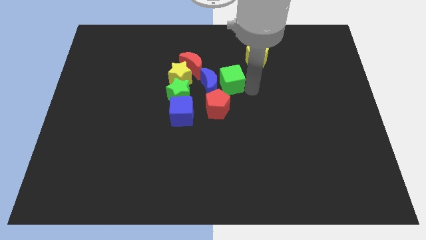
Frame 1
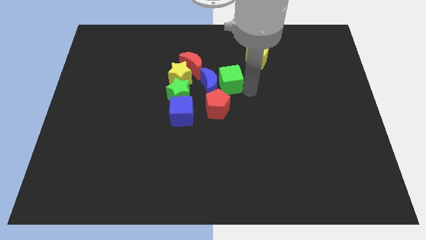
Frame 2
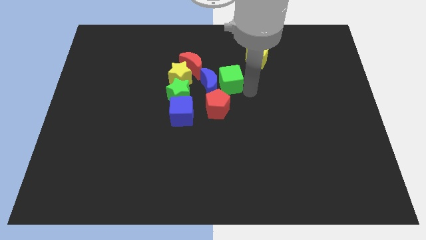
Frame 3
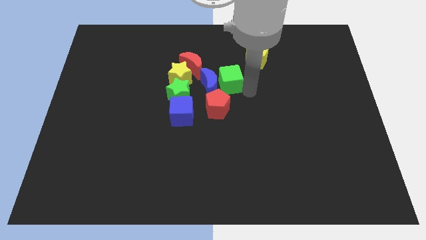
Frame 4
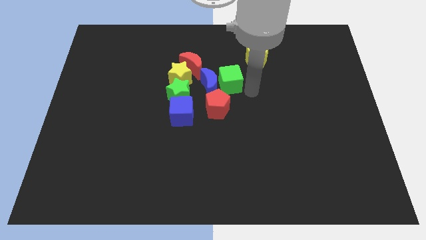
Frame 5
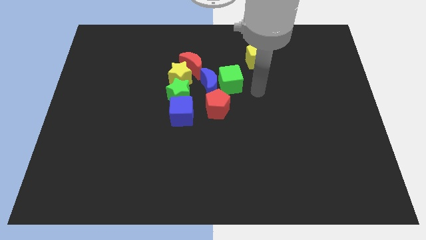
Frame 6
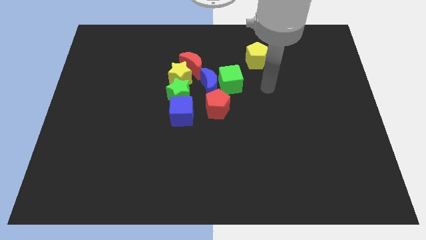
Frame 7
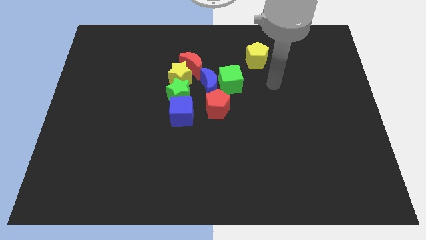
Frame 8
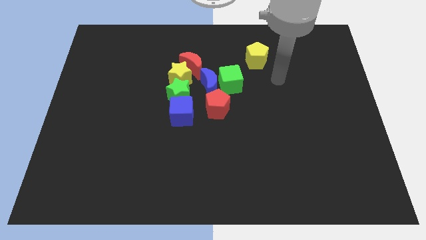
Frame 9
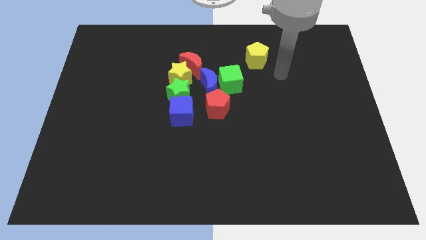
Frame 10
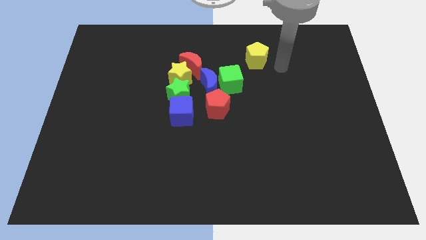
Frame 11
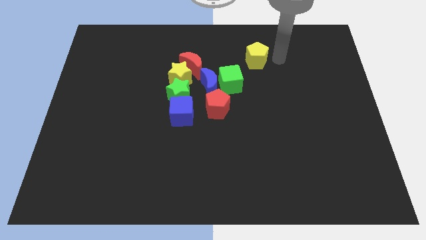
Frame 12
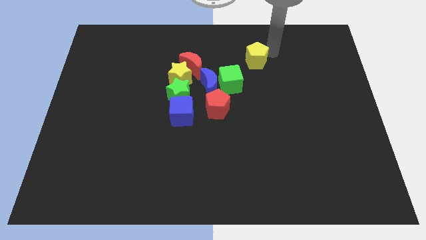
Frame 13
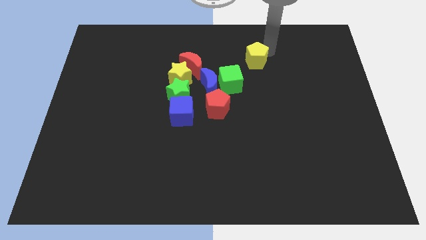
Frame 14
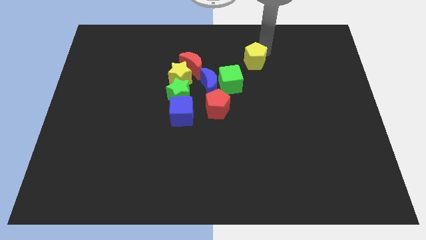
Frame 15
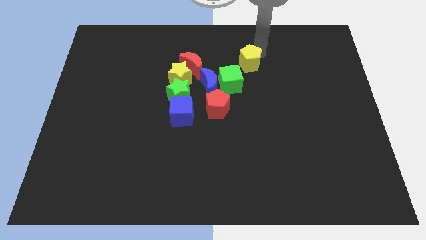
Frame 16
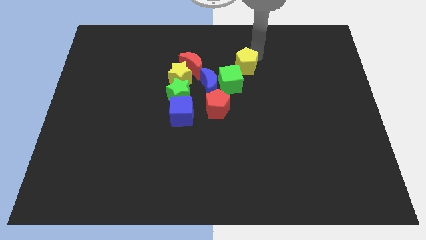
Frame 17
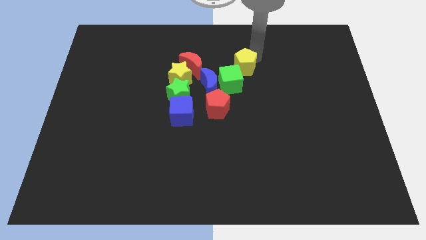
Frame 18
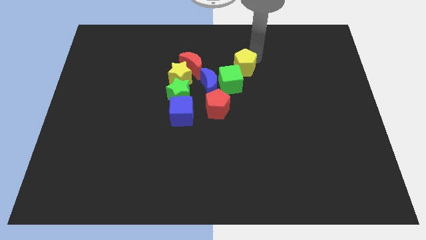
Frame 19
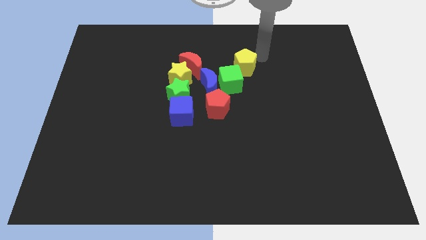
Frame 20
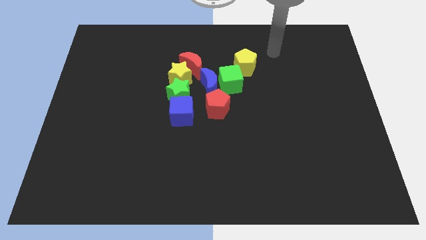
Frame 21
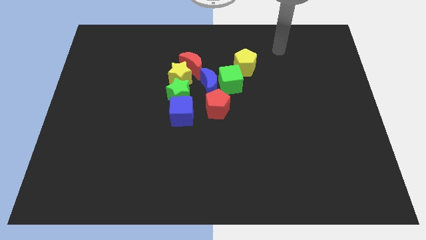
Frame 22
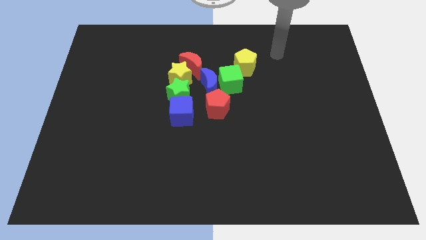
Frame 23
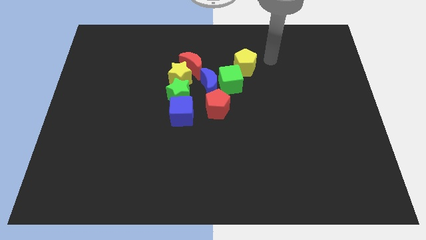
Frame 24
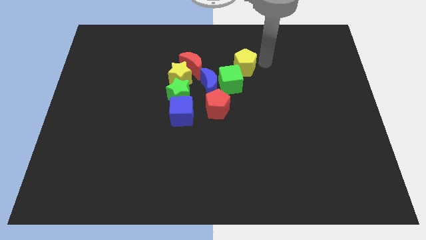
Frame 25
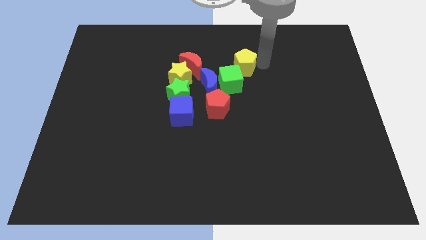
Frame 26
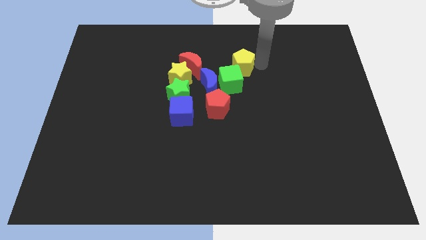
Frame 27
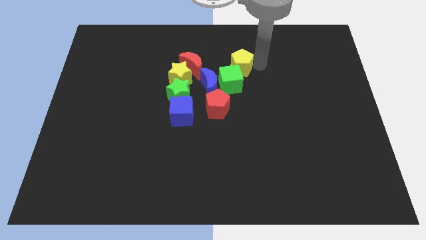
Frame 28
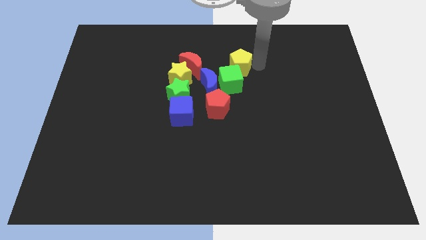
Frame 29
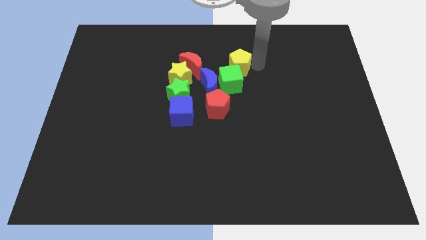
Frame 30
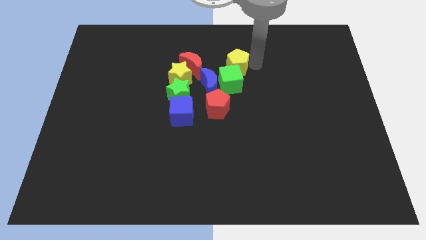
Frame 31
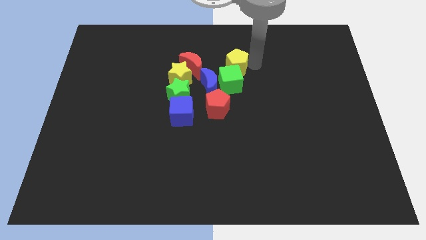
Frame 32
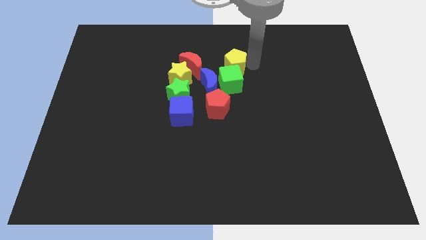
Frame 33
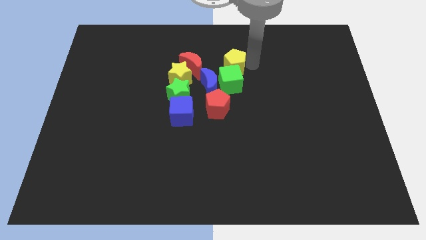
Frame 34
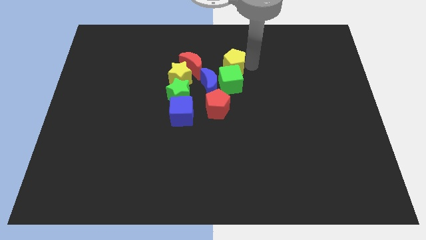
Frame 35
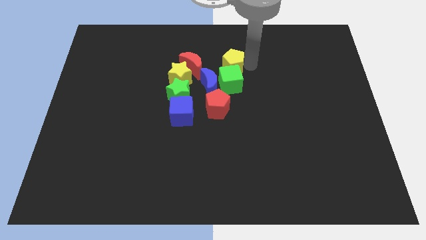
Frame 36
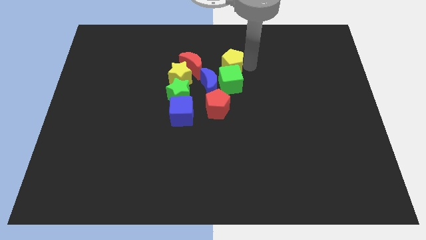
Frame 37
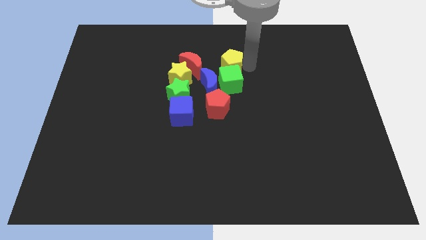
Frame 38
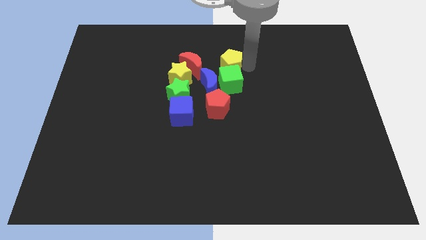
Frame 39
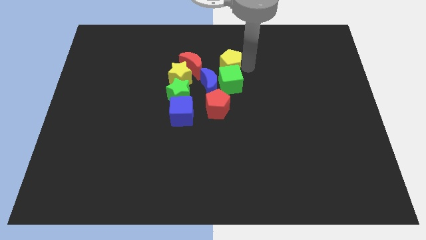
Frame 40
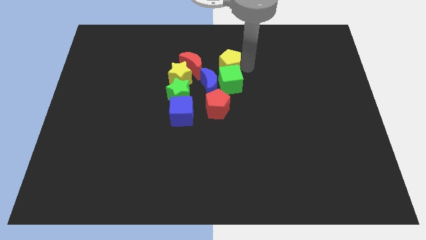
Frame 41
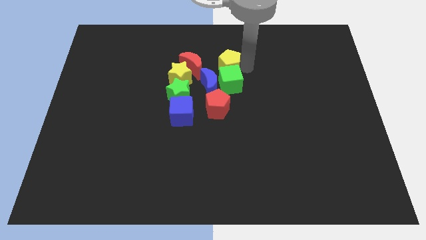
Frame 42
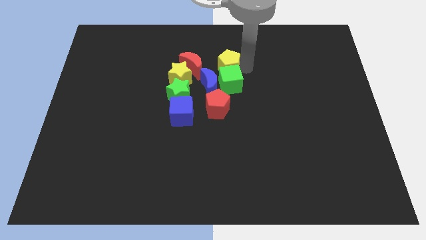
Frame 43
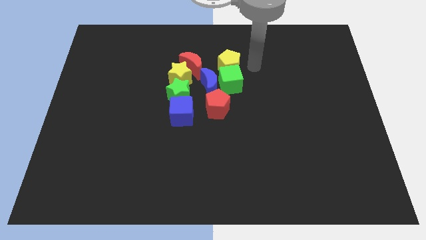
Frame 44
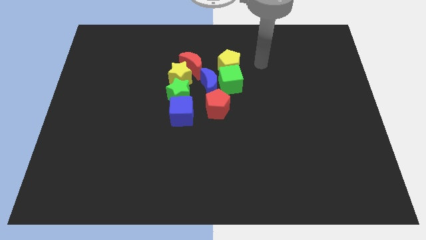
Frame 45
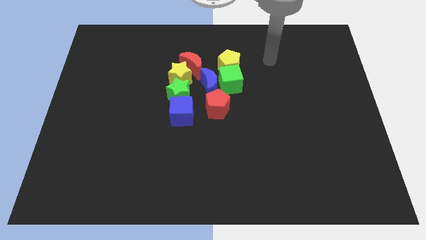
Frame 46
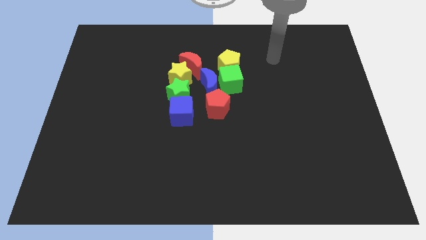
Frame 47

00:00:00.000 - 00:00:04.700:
move yellow pentagon above the green cube

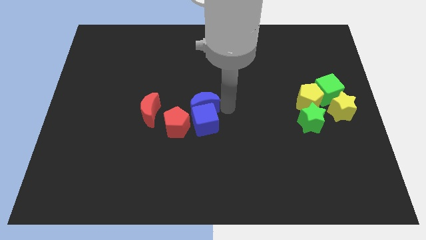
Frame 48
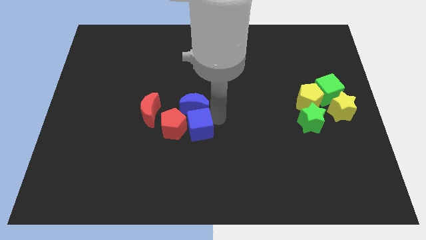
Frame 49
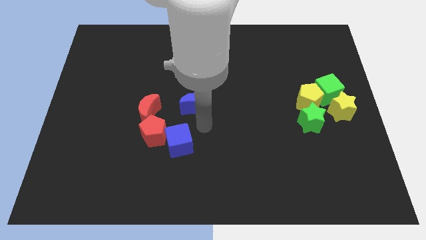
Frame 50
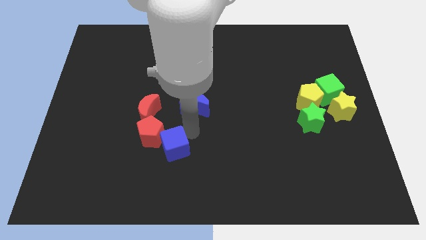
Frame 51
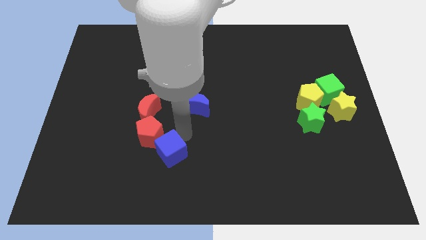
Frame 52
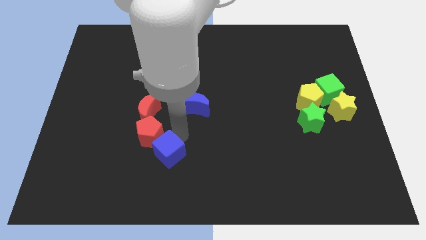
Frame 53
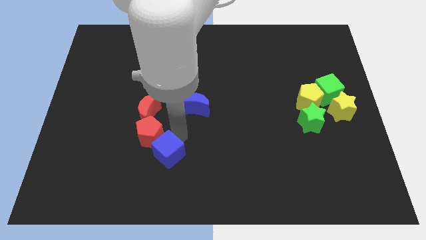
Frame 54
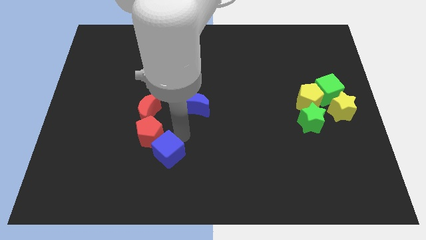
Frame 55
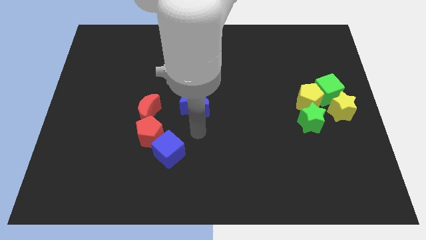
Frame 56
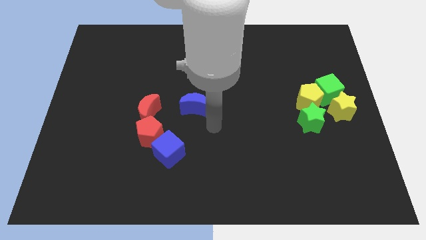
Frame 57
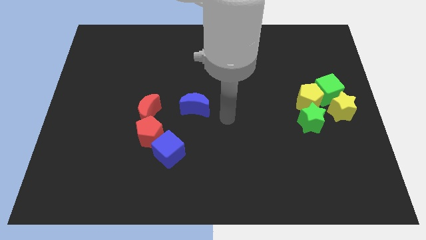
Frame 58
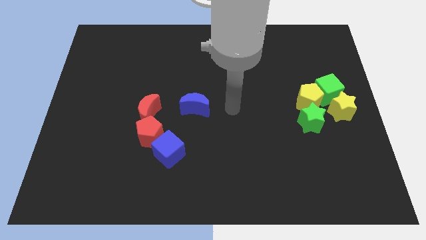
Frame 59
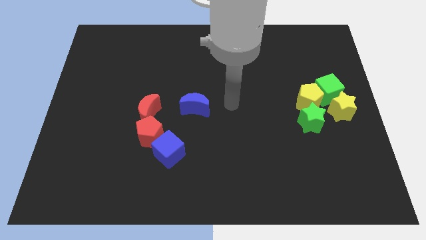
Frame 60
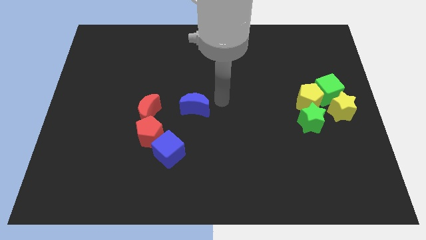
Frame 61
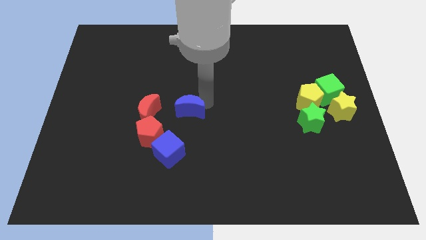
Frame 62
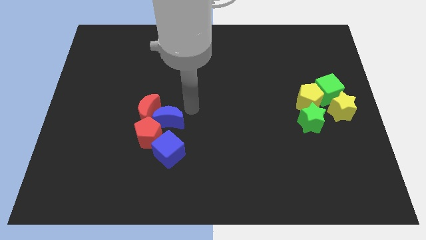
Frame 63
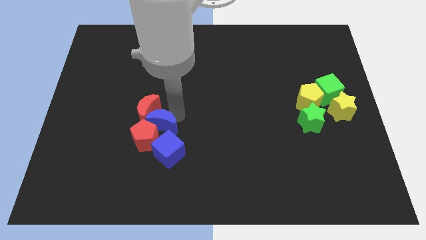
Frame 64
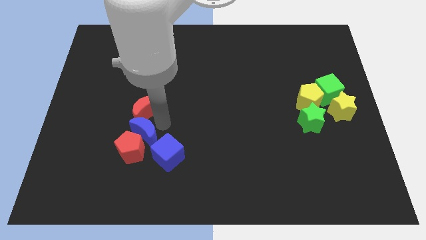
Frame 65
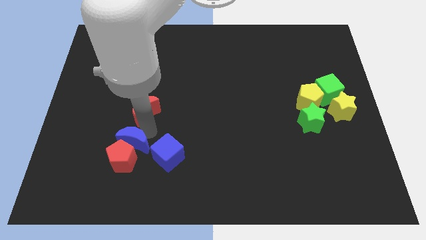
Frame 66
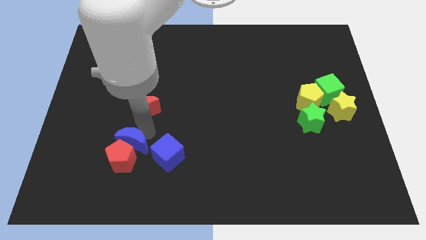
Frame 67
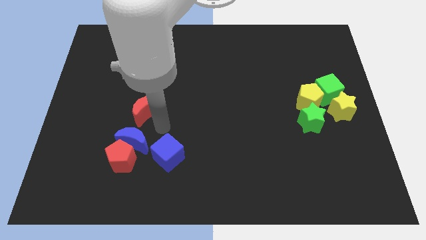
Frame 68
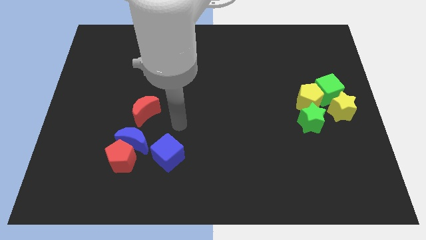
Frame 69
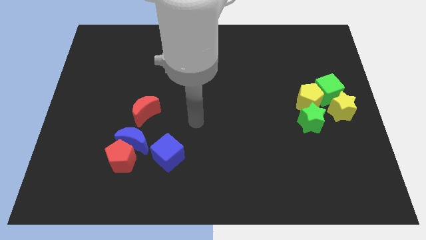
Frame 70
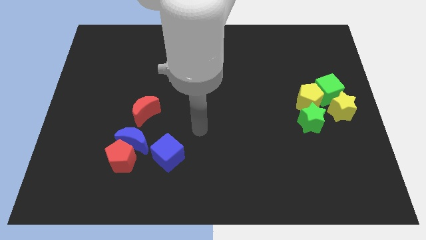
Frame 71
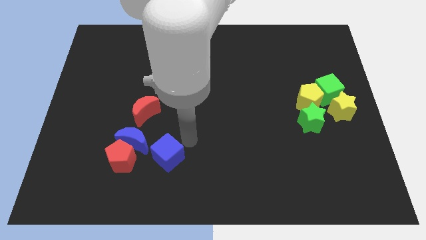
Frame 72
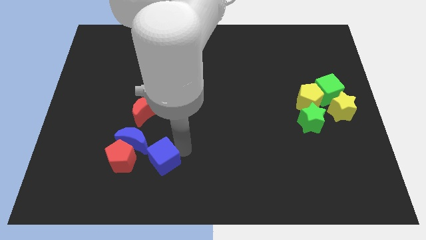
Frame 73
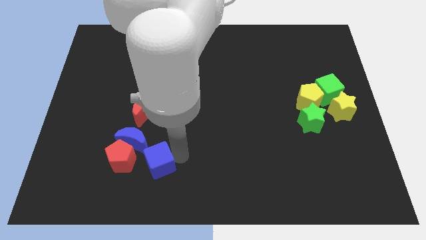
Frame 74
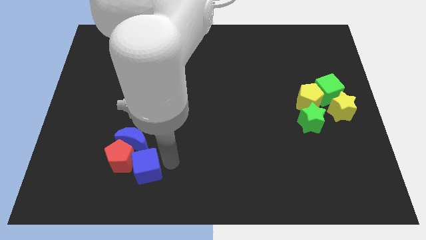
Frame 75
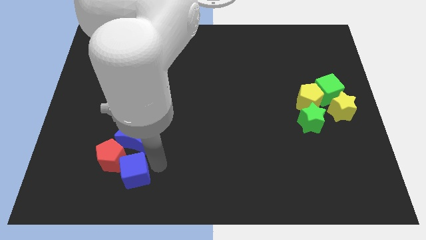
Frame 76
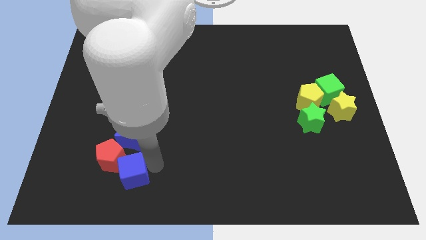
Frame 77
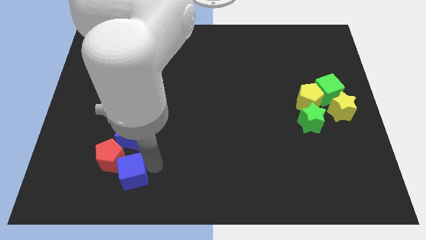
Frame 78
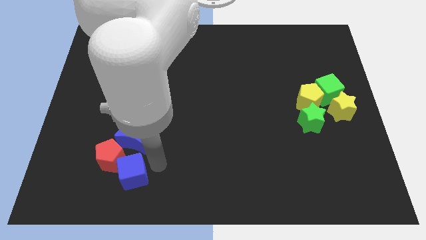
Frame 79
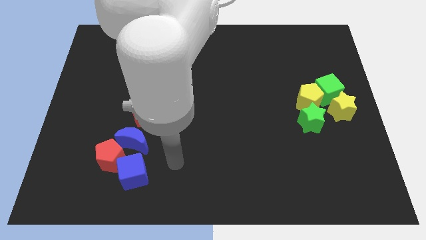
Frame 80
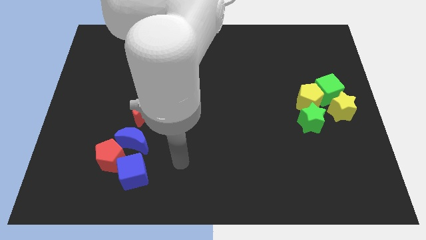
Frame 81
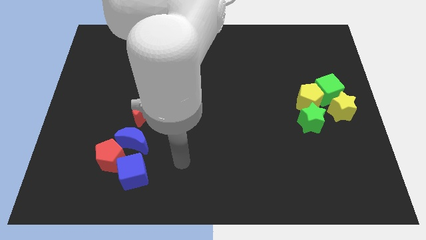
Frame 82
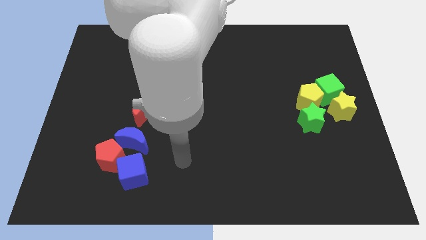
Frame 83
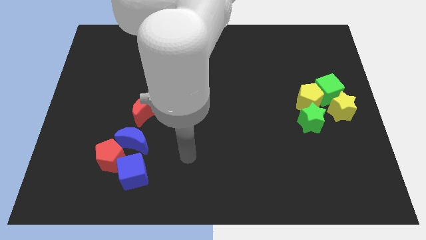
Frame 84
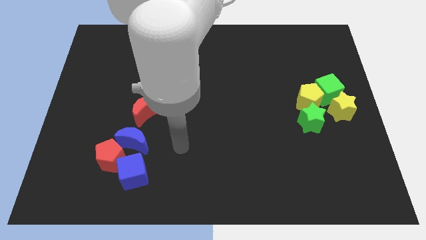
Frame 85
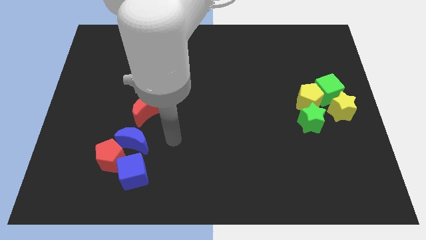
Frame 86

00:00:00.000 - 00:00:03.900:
push the red and blue blocks towards the bottom left side of the board

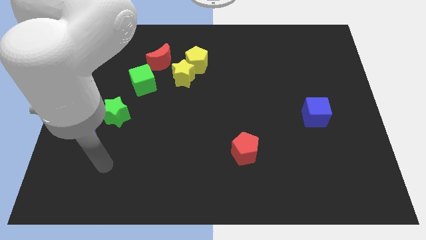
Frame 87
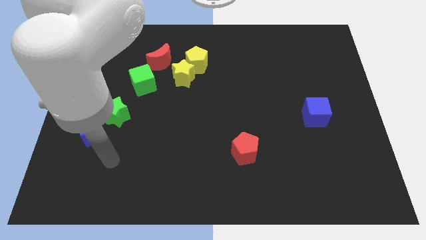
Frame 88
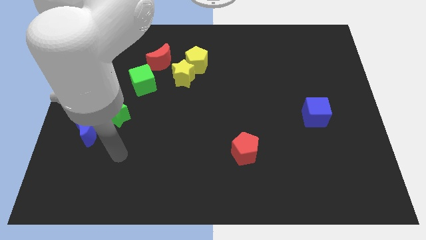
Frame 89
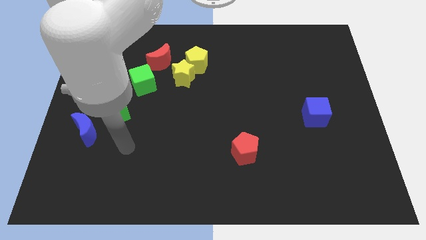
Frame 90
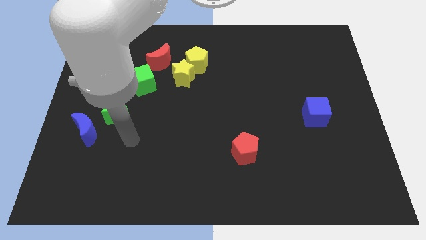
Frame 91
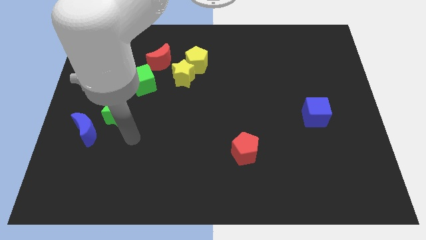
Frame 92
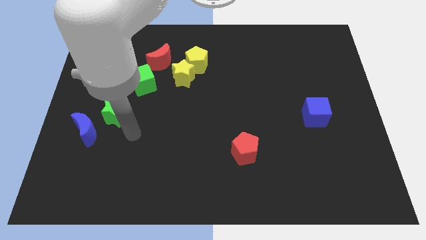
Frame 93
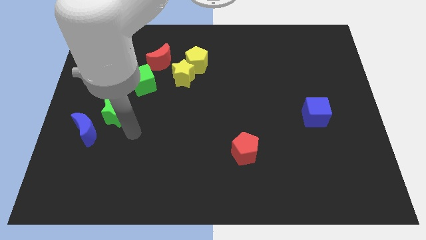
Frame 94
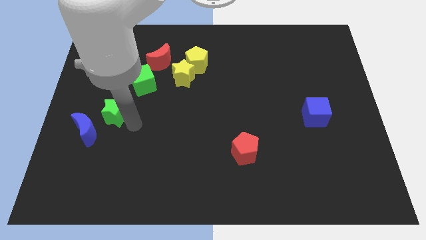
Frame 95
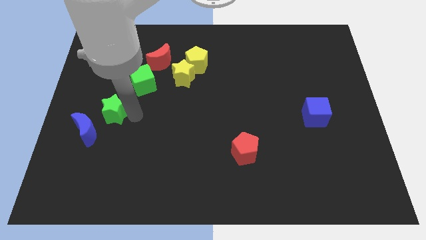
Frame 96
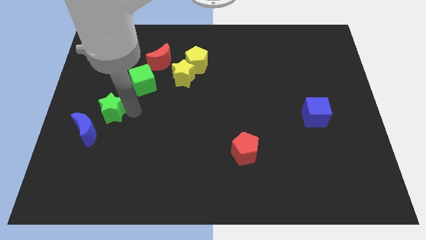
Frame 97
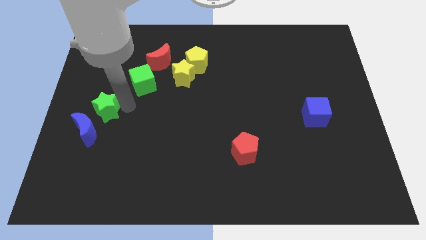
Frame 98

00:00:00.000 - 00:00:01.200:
push the green star close to the blue crescent
